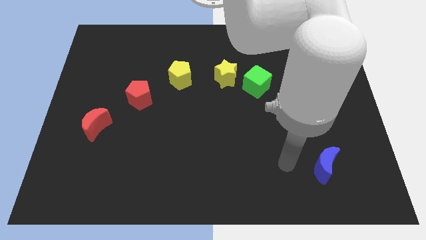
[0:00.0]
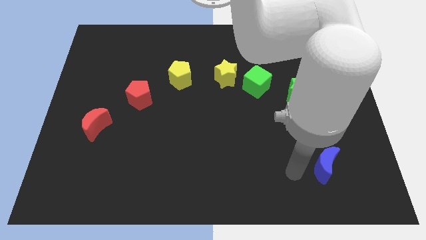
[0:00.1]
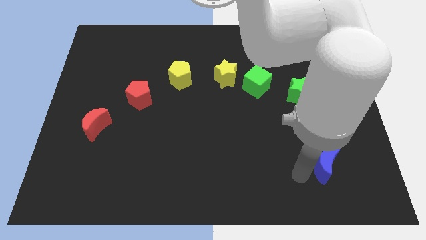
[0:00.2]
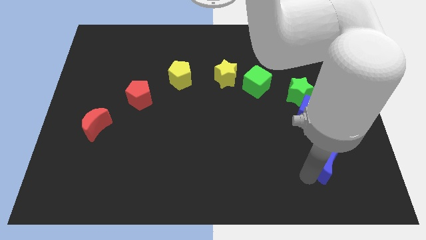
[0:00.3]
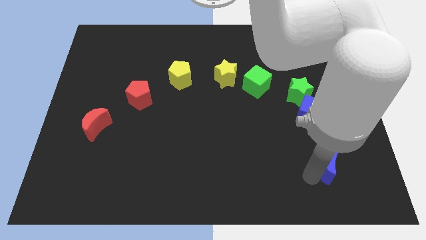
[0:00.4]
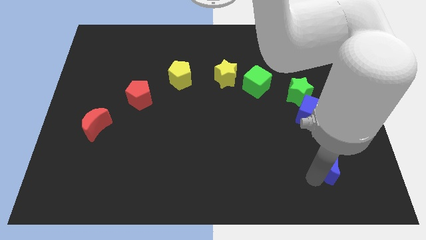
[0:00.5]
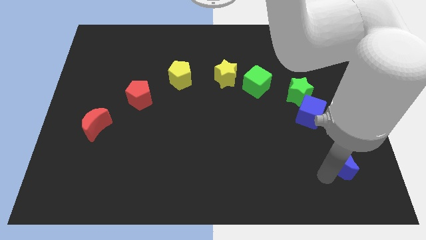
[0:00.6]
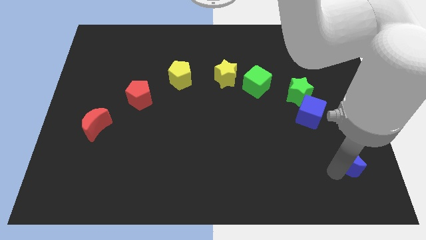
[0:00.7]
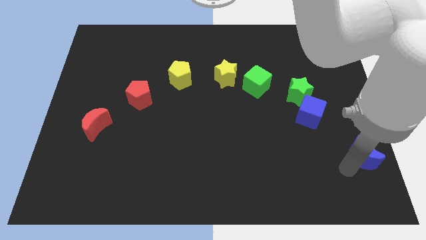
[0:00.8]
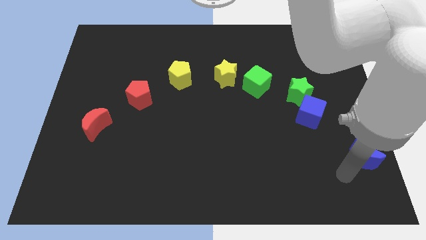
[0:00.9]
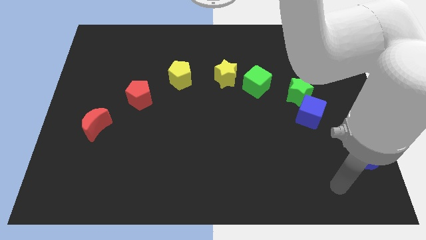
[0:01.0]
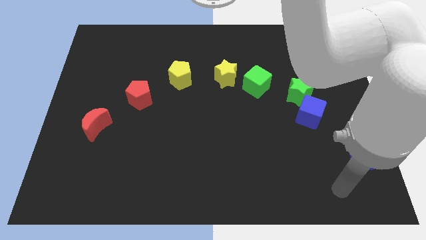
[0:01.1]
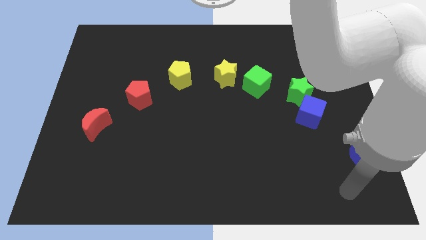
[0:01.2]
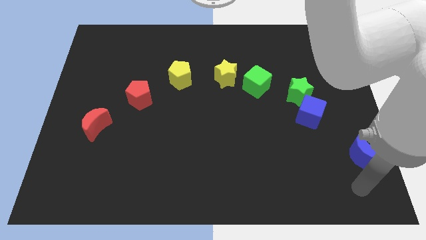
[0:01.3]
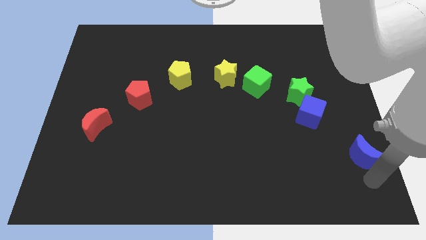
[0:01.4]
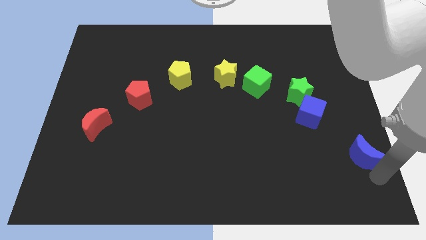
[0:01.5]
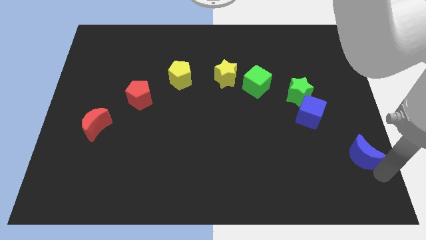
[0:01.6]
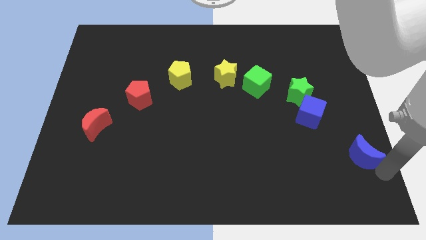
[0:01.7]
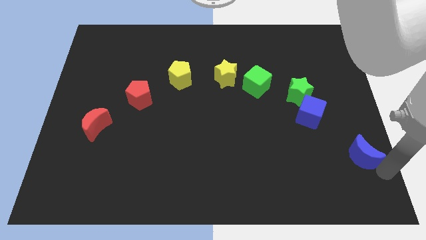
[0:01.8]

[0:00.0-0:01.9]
push the blue moon towards the right side of the board

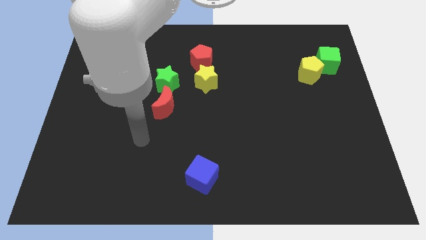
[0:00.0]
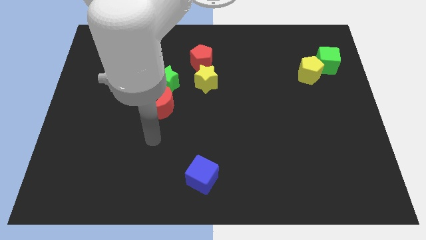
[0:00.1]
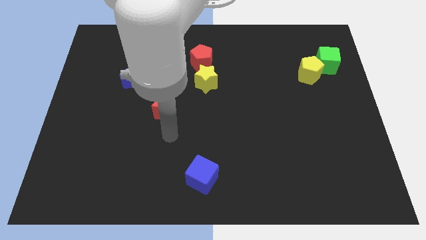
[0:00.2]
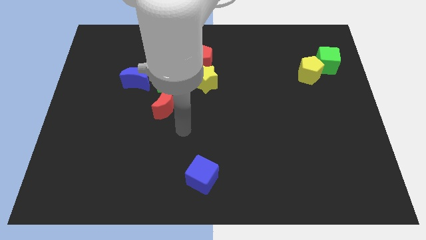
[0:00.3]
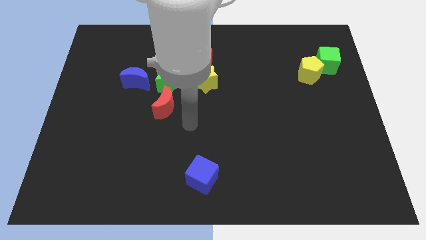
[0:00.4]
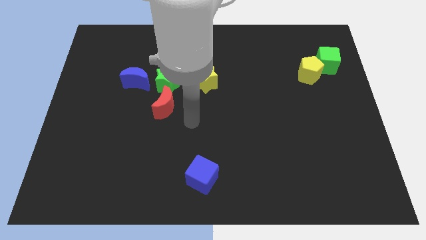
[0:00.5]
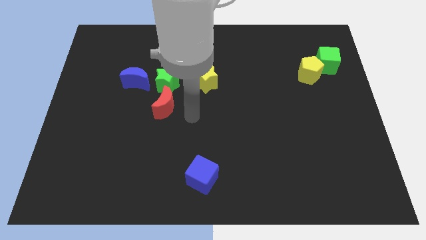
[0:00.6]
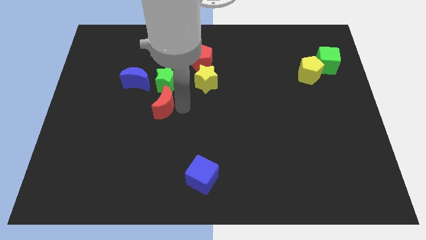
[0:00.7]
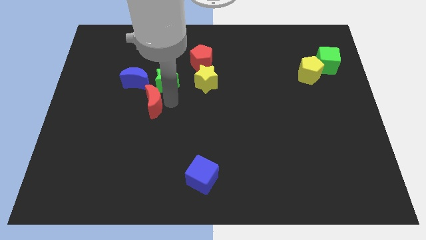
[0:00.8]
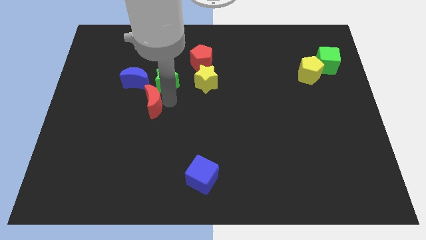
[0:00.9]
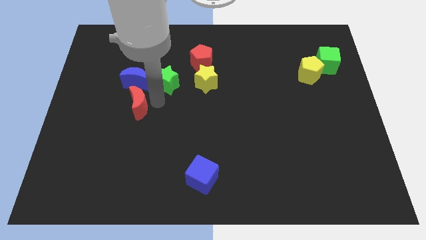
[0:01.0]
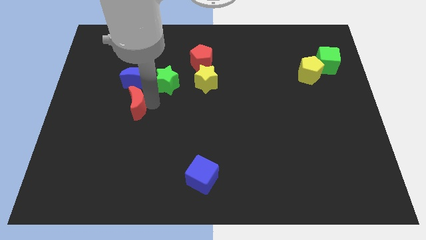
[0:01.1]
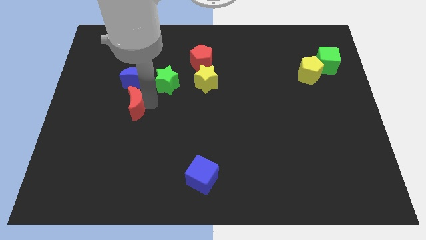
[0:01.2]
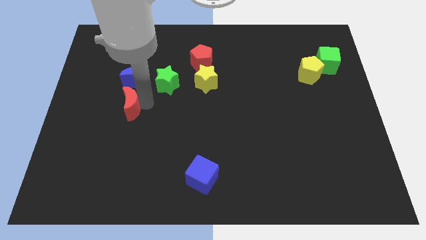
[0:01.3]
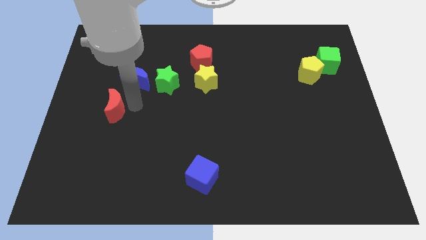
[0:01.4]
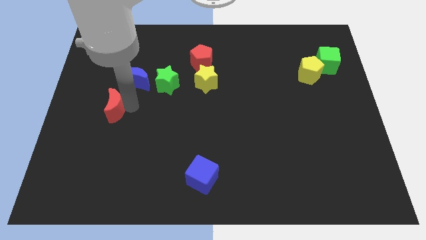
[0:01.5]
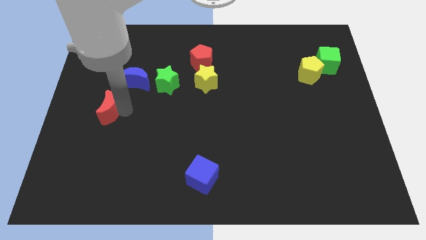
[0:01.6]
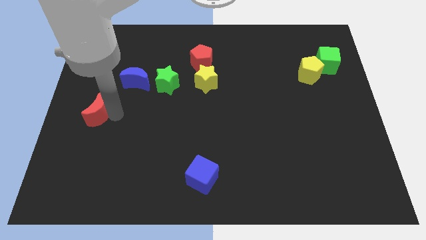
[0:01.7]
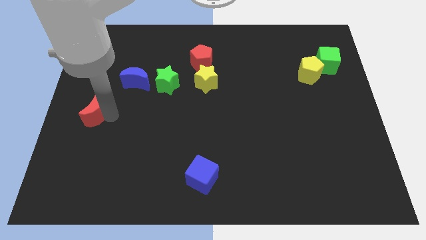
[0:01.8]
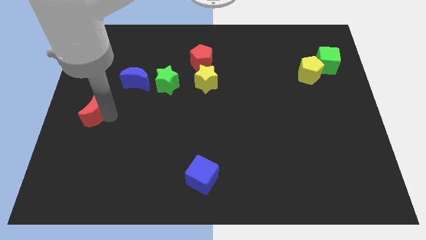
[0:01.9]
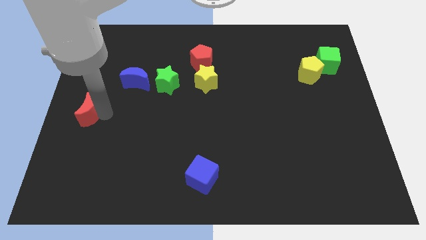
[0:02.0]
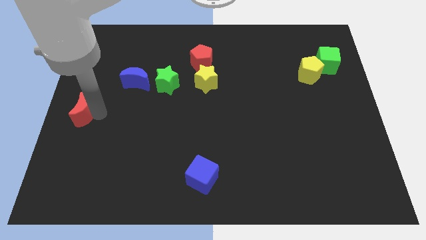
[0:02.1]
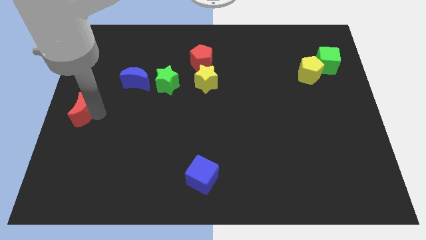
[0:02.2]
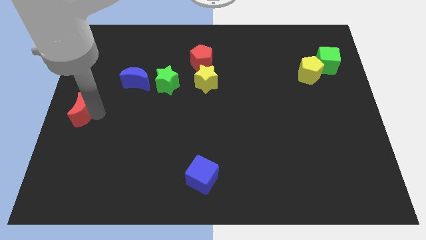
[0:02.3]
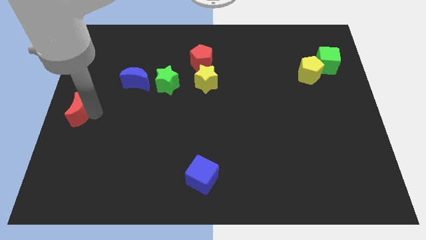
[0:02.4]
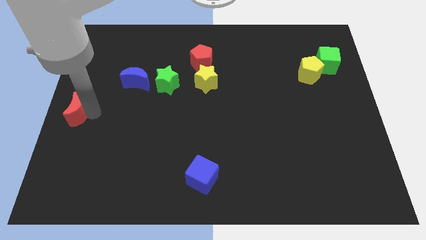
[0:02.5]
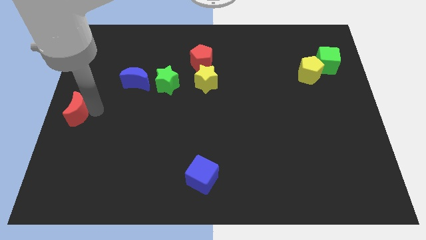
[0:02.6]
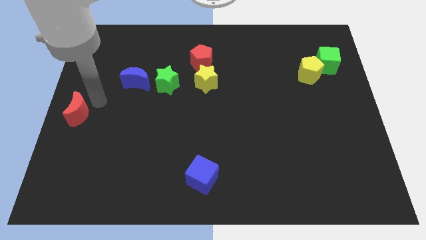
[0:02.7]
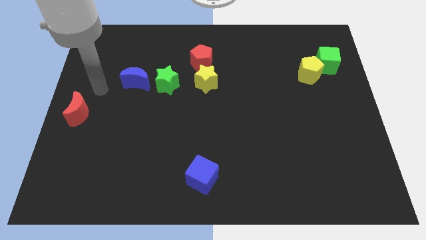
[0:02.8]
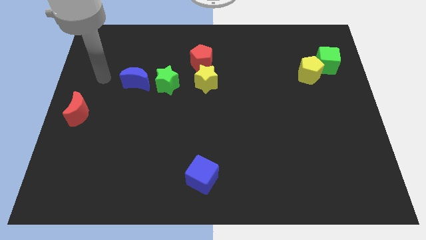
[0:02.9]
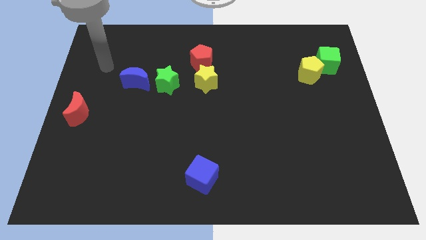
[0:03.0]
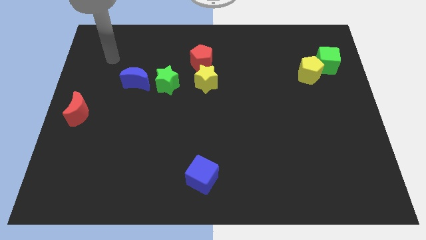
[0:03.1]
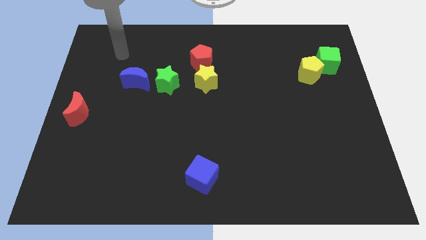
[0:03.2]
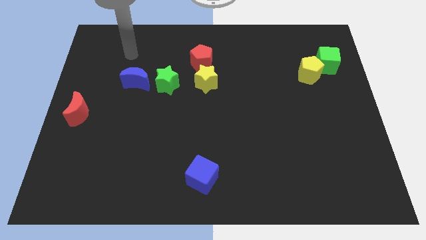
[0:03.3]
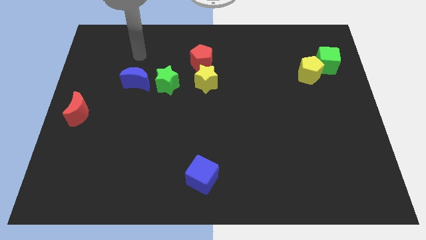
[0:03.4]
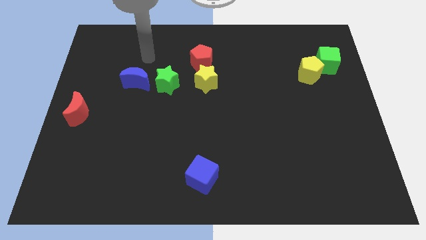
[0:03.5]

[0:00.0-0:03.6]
move the red crescent to the center left

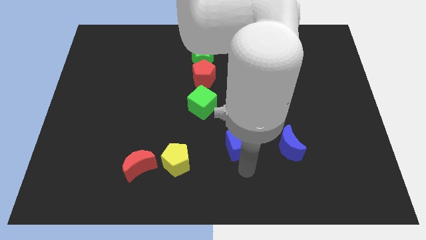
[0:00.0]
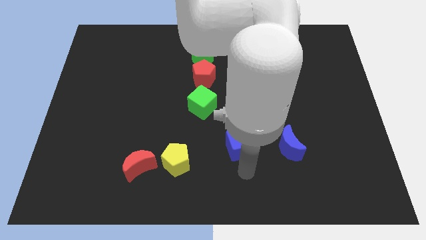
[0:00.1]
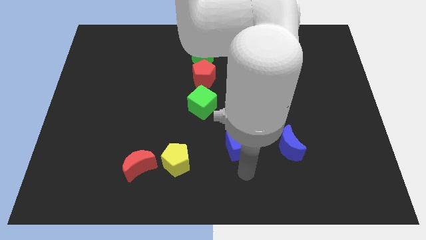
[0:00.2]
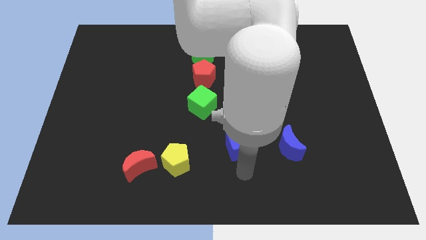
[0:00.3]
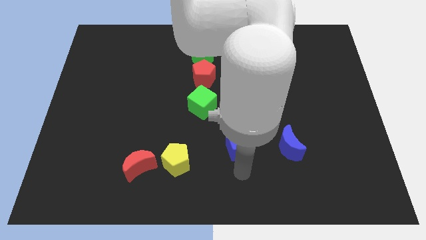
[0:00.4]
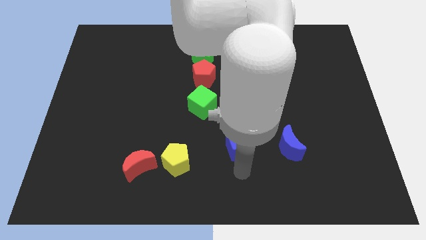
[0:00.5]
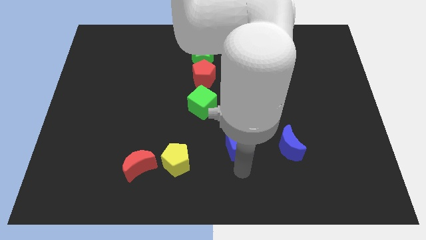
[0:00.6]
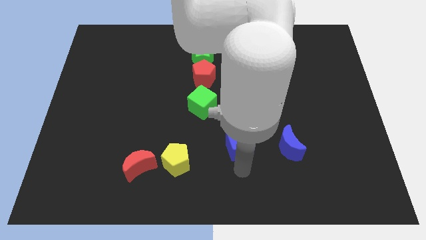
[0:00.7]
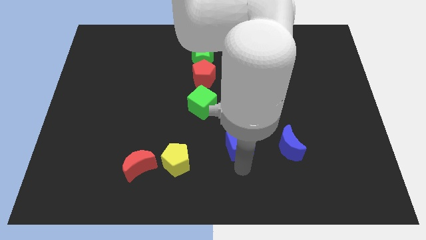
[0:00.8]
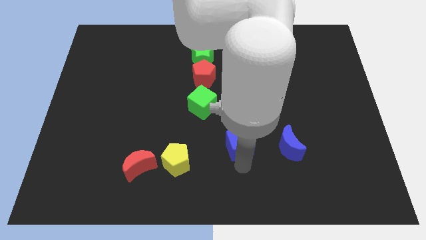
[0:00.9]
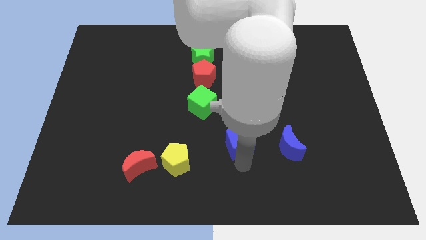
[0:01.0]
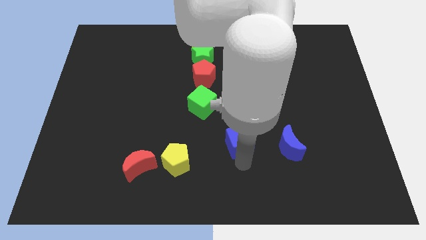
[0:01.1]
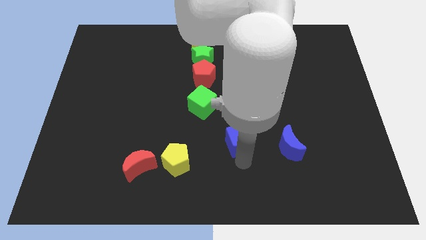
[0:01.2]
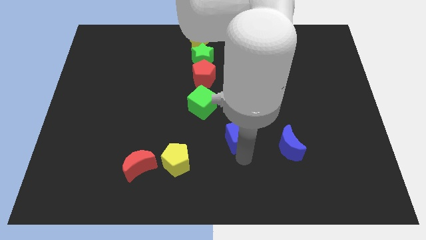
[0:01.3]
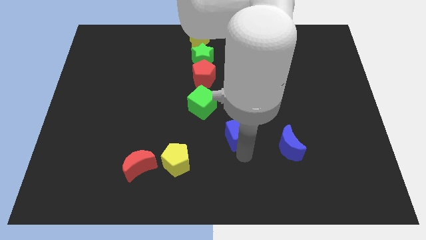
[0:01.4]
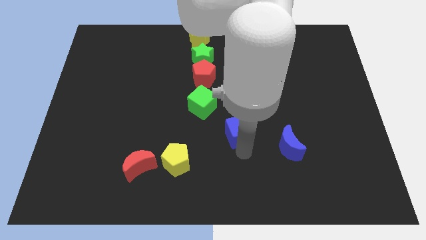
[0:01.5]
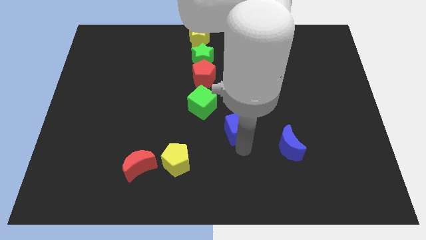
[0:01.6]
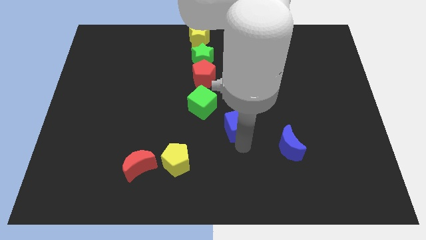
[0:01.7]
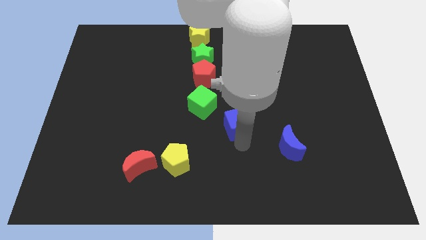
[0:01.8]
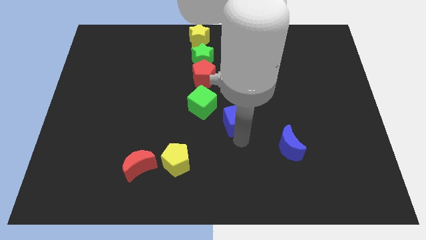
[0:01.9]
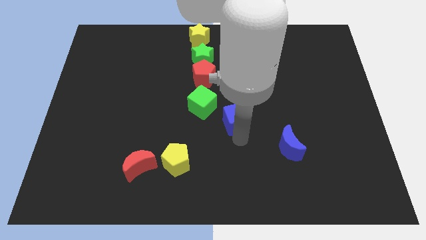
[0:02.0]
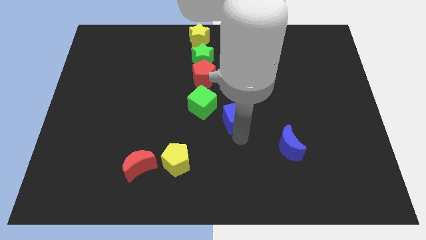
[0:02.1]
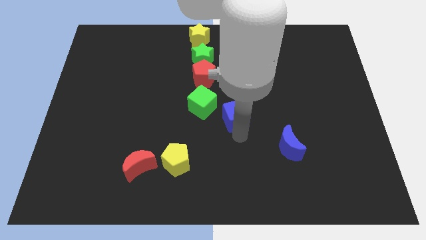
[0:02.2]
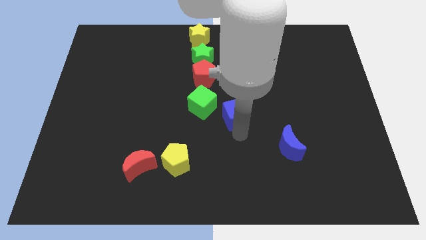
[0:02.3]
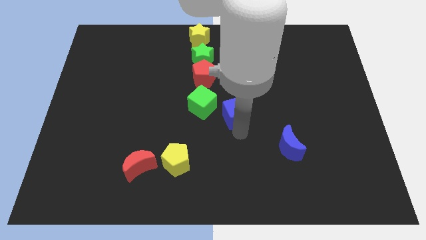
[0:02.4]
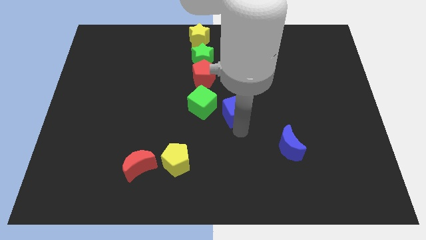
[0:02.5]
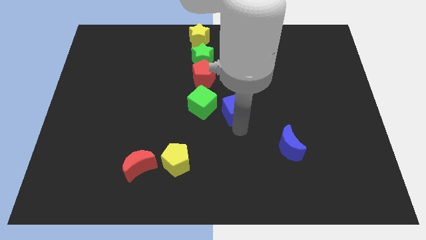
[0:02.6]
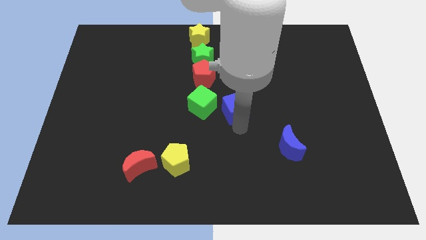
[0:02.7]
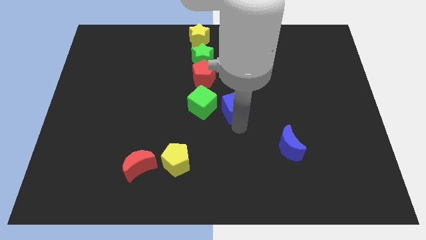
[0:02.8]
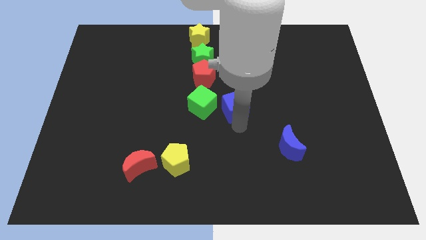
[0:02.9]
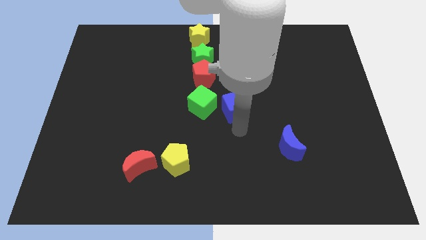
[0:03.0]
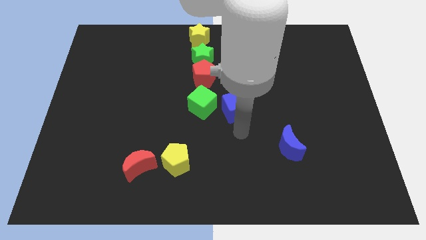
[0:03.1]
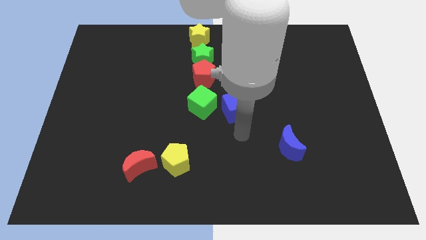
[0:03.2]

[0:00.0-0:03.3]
place the blue cube right of the green cube

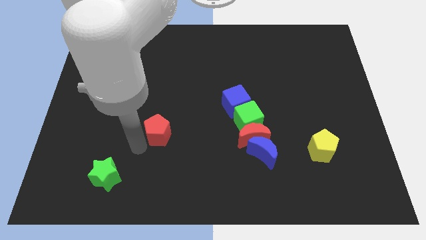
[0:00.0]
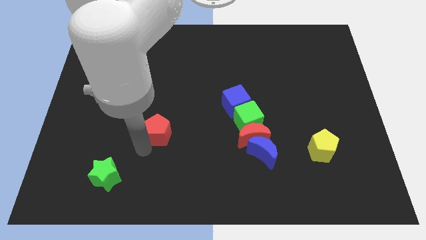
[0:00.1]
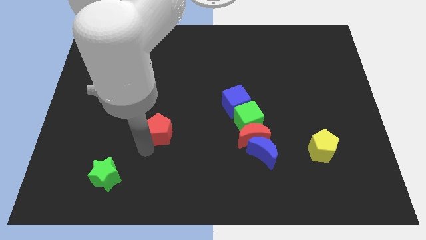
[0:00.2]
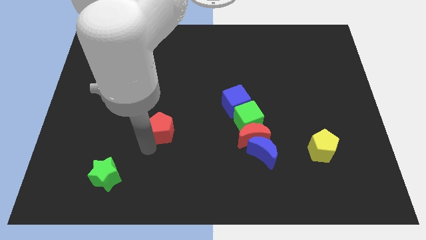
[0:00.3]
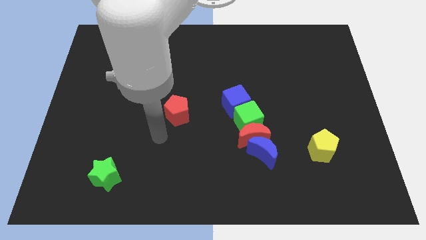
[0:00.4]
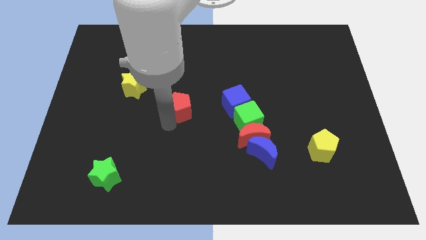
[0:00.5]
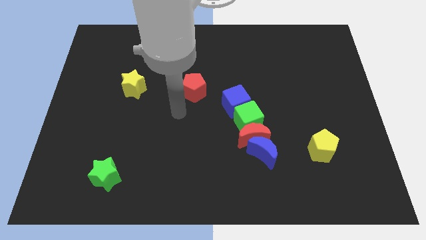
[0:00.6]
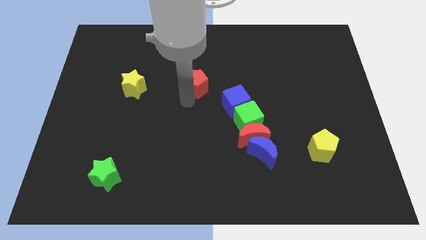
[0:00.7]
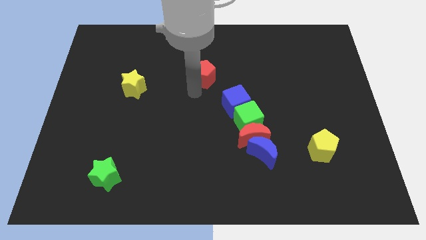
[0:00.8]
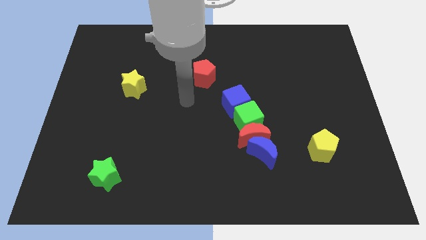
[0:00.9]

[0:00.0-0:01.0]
push red pentagon above blue cube
